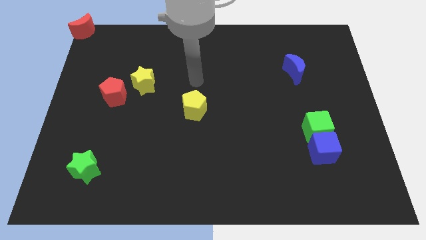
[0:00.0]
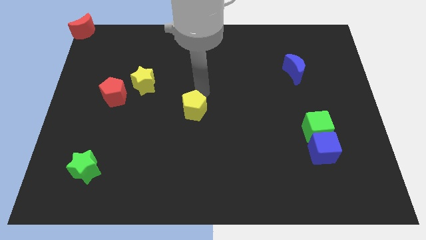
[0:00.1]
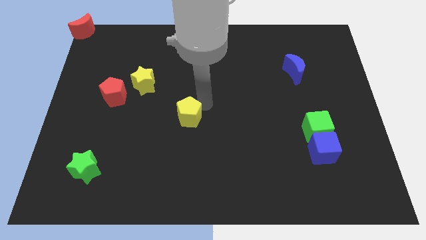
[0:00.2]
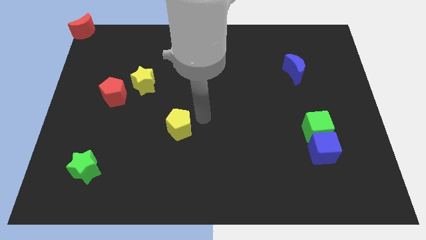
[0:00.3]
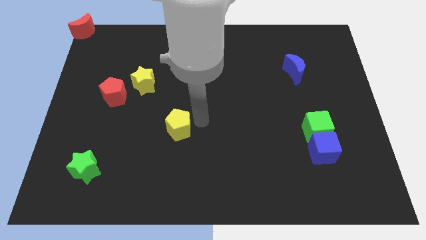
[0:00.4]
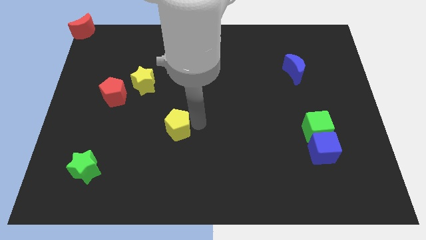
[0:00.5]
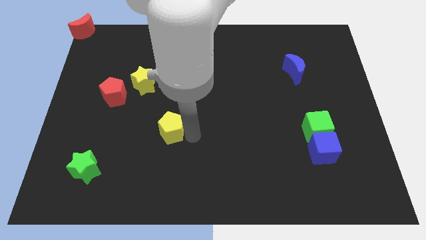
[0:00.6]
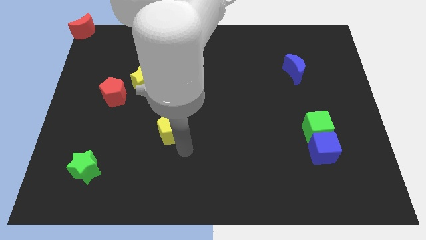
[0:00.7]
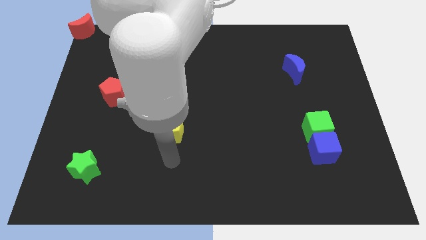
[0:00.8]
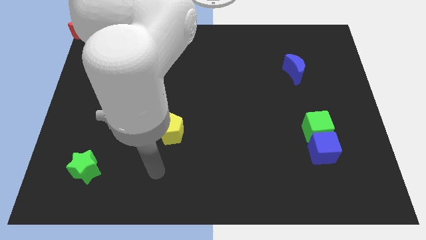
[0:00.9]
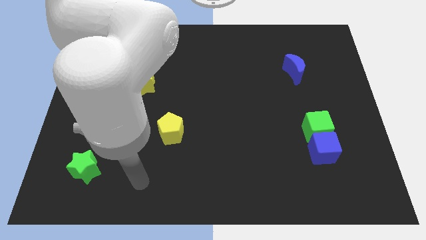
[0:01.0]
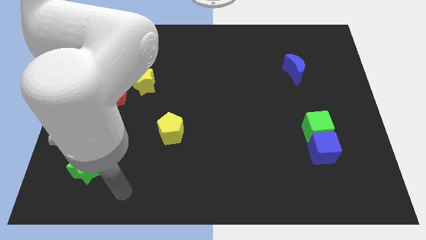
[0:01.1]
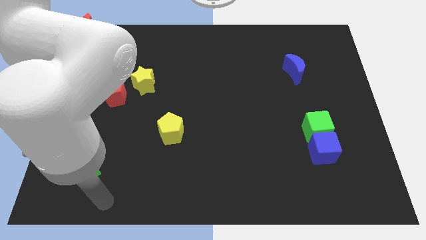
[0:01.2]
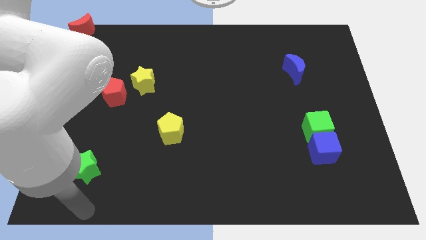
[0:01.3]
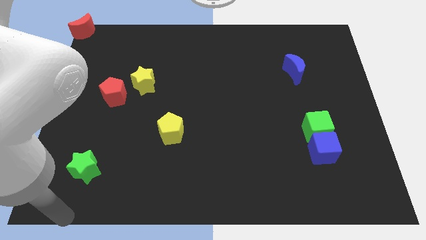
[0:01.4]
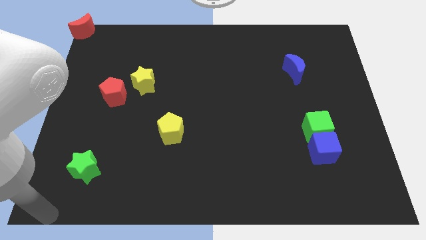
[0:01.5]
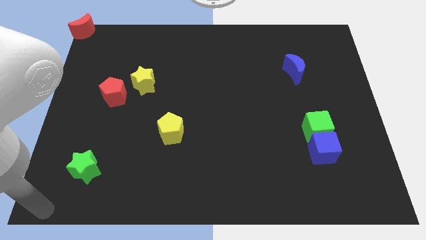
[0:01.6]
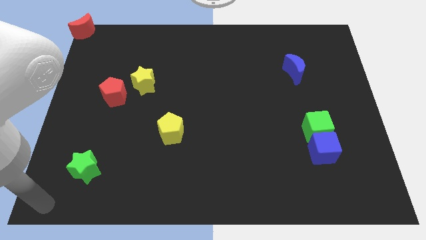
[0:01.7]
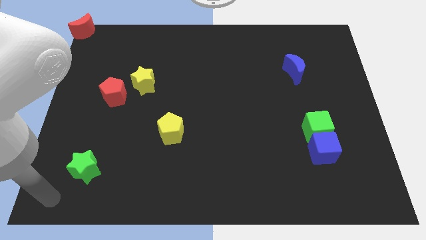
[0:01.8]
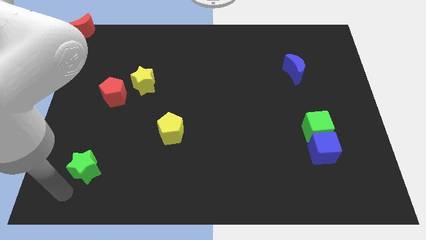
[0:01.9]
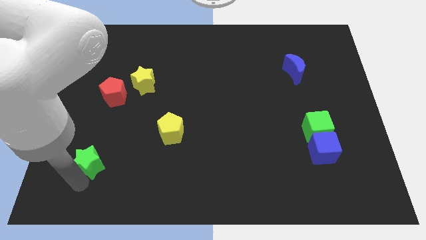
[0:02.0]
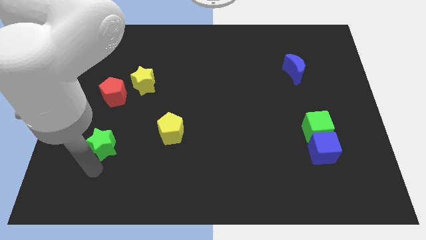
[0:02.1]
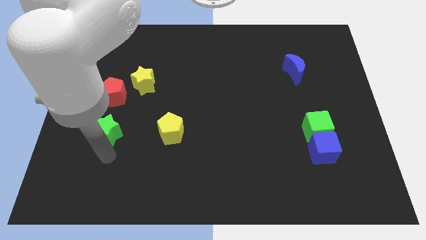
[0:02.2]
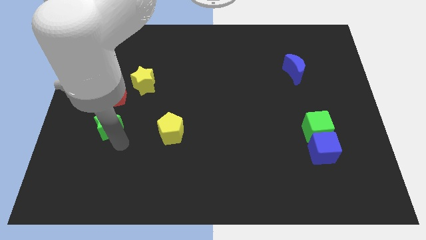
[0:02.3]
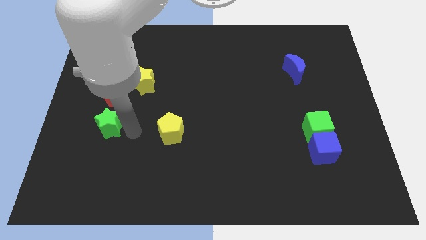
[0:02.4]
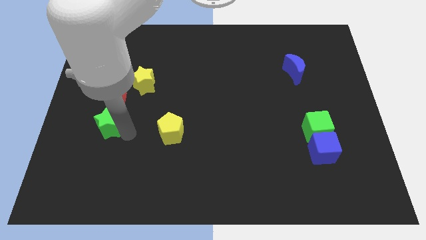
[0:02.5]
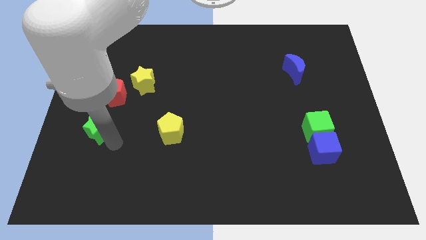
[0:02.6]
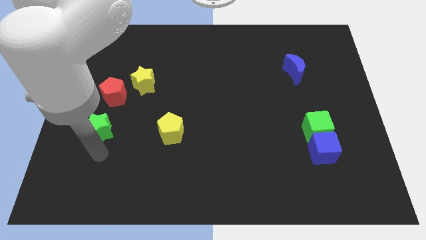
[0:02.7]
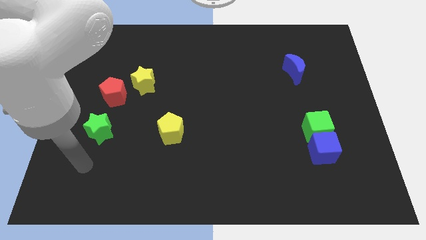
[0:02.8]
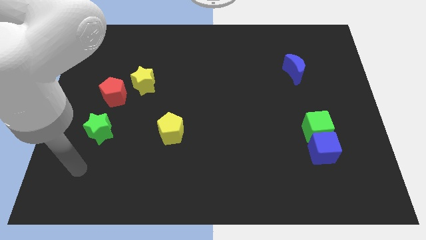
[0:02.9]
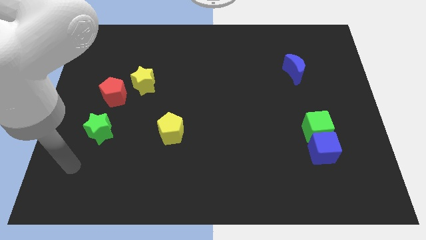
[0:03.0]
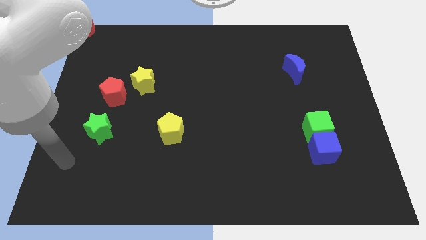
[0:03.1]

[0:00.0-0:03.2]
move the green star towards the bottom of the red pentagon

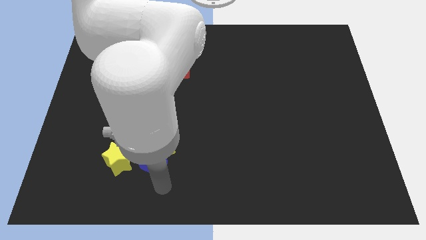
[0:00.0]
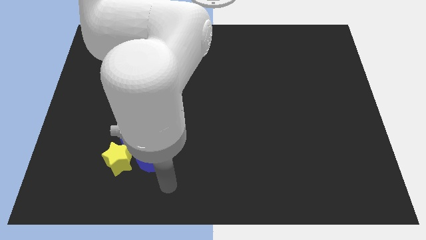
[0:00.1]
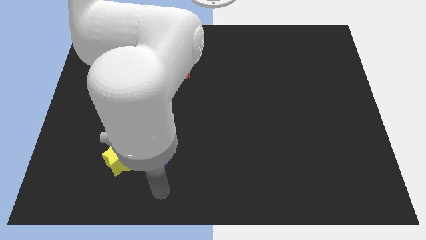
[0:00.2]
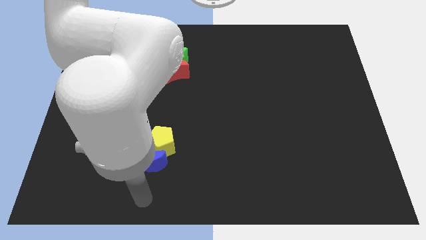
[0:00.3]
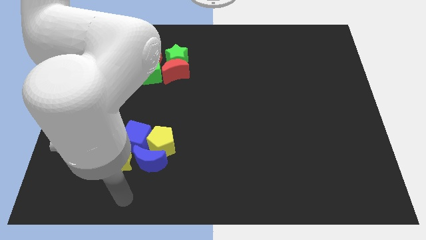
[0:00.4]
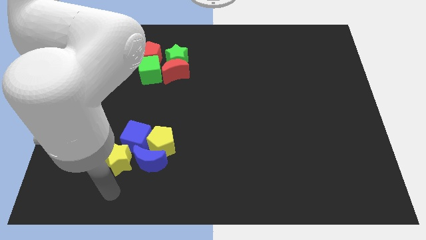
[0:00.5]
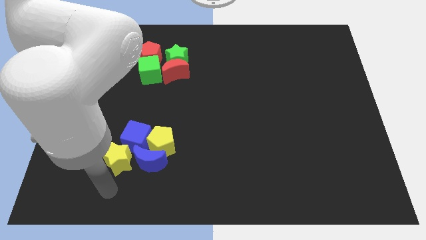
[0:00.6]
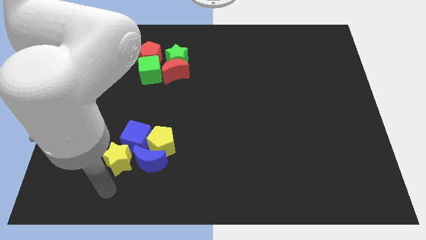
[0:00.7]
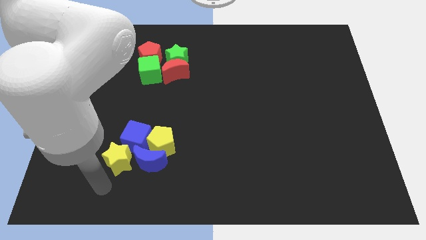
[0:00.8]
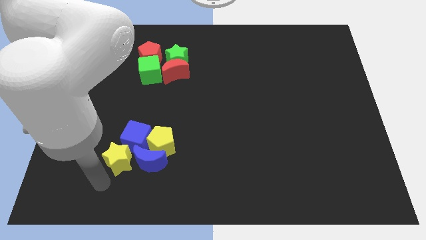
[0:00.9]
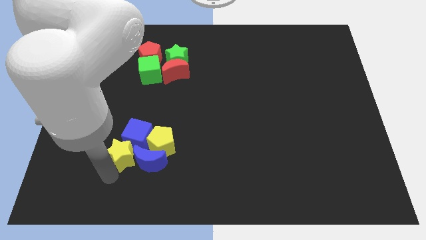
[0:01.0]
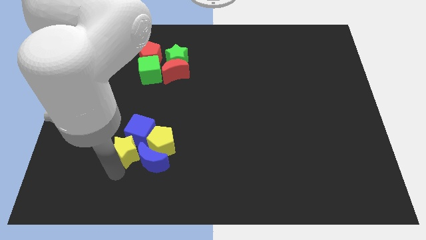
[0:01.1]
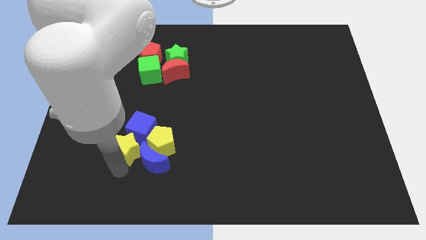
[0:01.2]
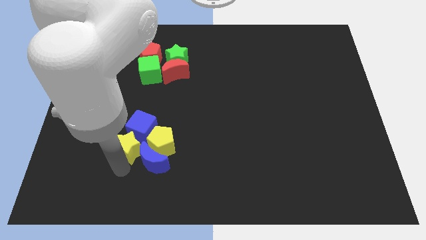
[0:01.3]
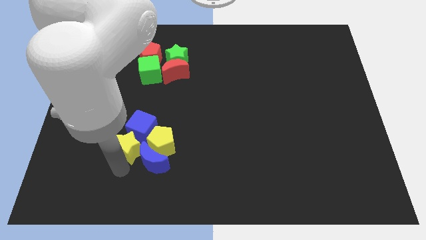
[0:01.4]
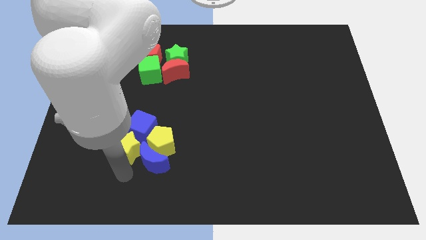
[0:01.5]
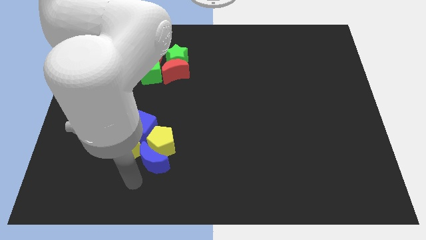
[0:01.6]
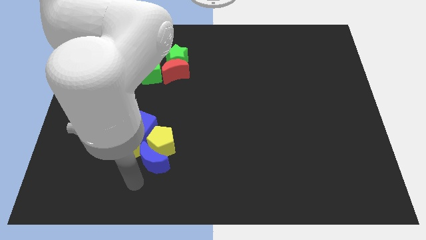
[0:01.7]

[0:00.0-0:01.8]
push the yellow star into the blue cube

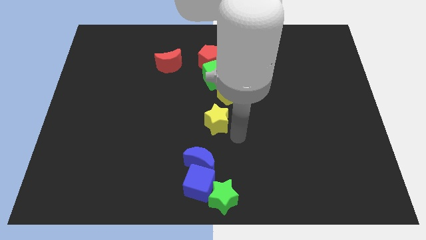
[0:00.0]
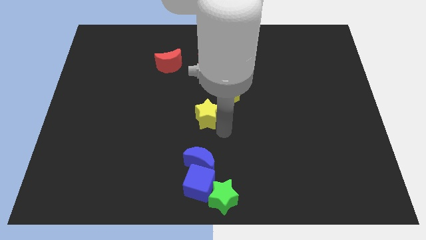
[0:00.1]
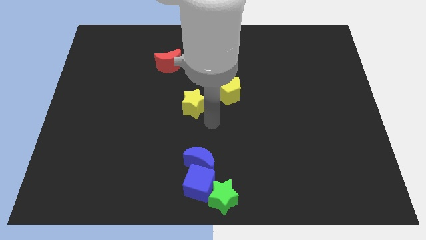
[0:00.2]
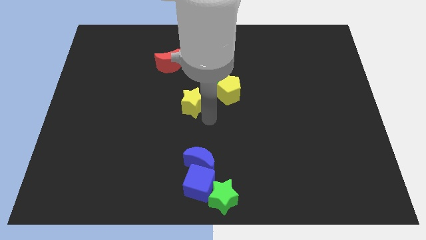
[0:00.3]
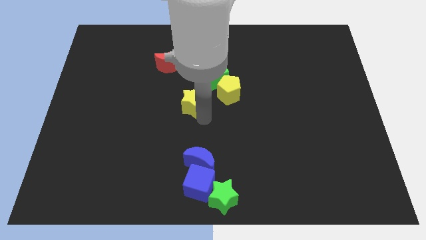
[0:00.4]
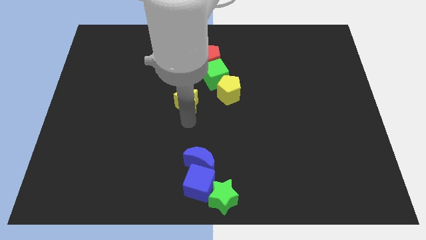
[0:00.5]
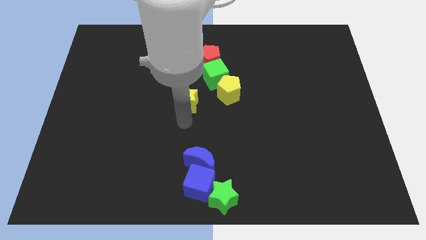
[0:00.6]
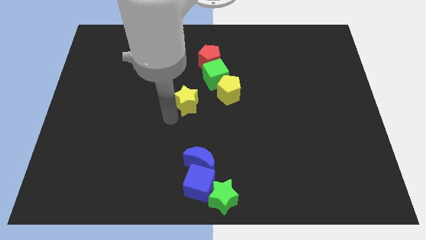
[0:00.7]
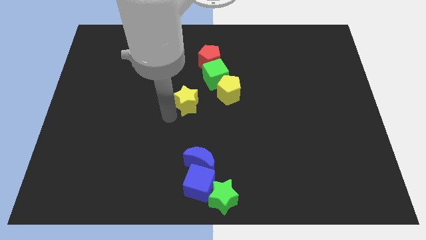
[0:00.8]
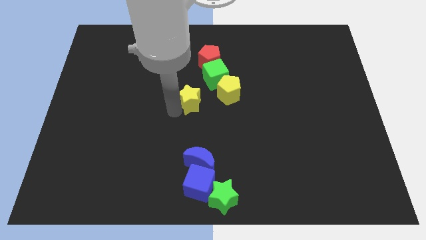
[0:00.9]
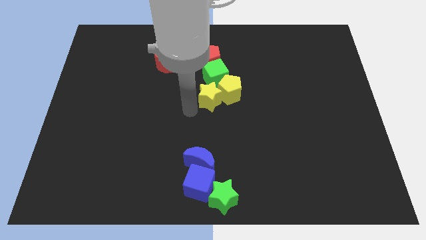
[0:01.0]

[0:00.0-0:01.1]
place the yellow star horizontally to the left side of the yellow pentagon

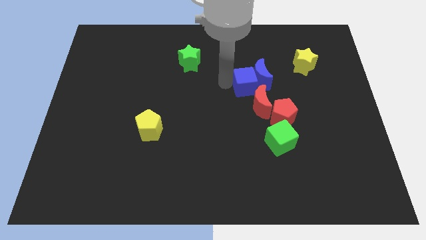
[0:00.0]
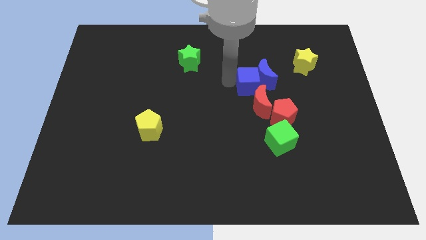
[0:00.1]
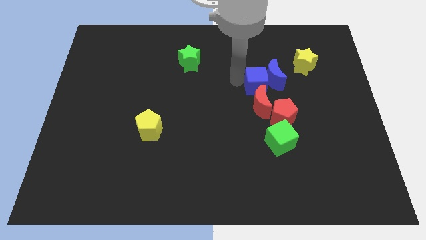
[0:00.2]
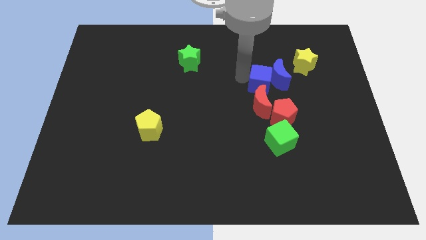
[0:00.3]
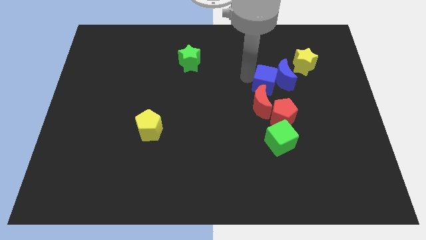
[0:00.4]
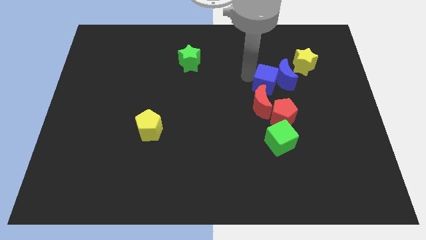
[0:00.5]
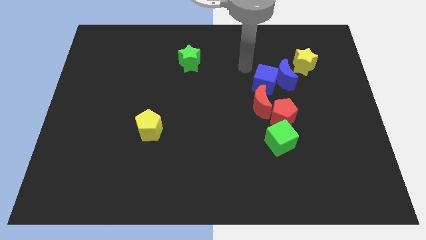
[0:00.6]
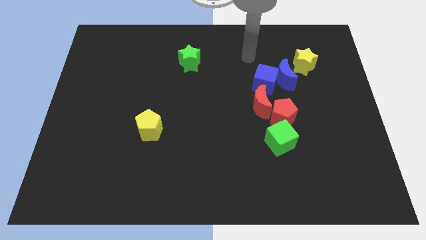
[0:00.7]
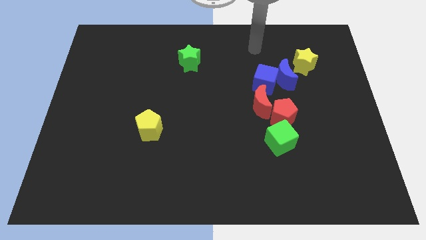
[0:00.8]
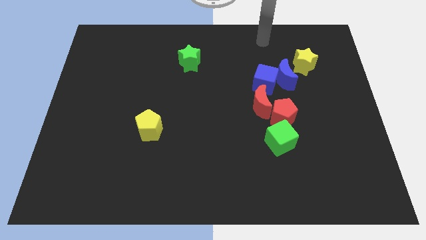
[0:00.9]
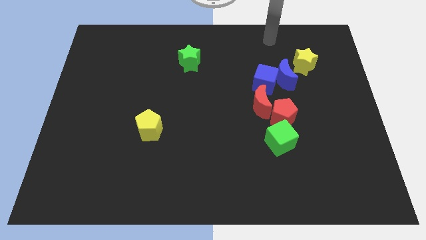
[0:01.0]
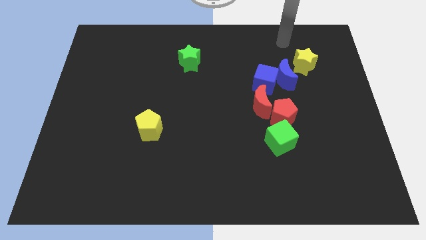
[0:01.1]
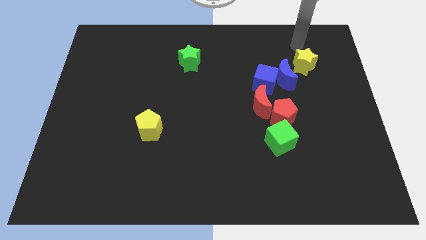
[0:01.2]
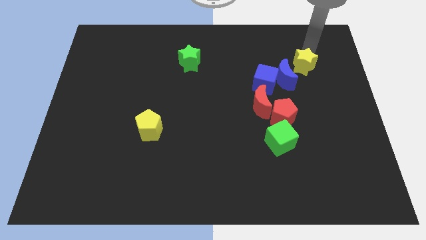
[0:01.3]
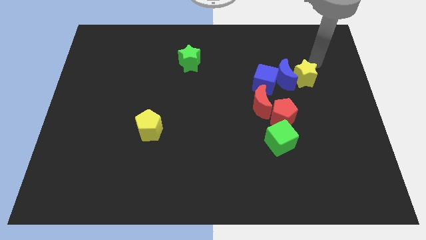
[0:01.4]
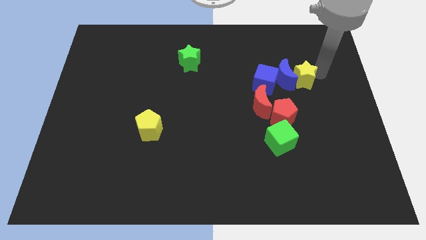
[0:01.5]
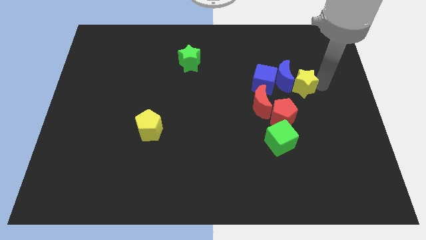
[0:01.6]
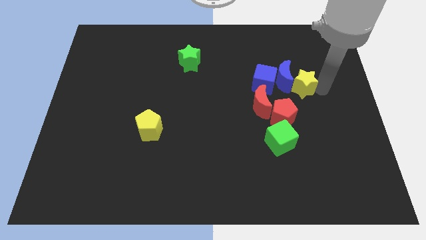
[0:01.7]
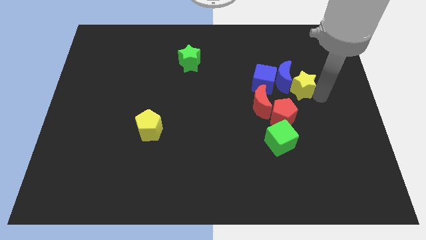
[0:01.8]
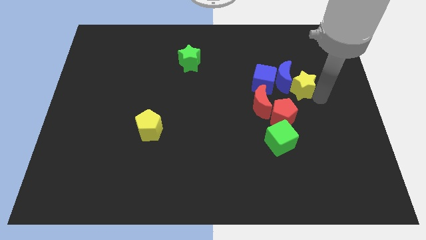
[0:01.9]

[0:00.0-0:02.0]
move yellow star close to the blue moon

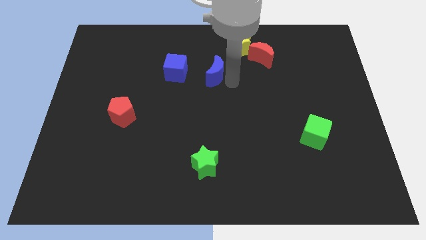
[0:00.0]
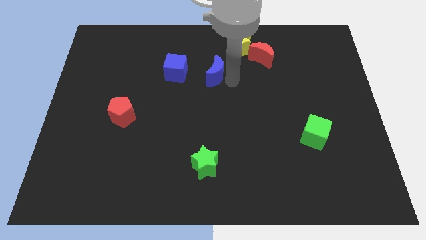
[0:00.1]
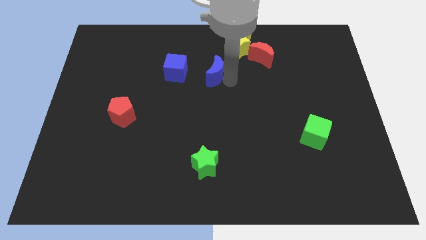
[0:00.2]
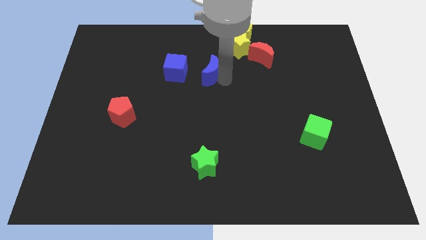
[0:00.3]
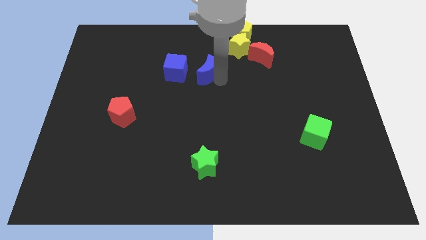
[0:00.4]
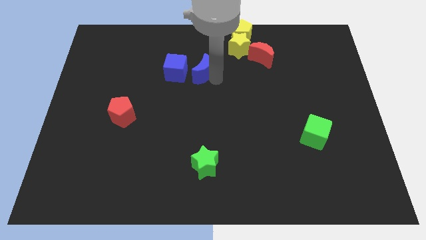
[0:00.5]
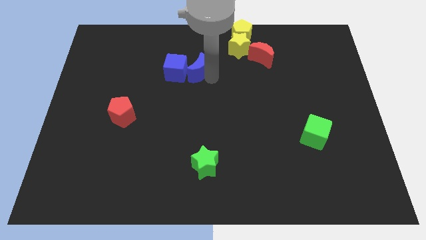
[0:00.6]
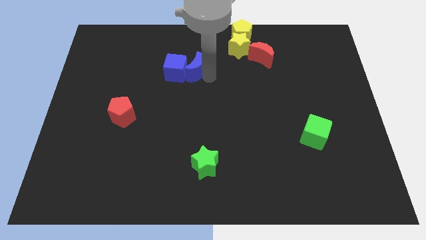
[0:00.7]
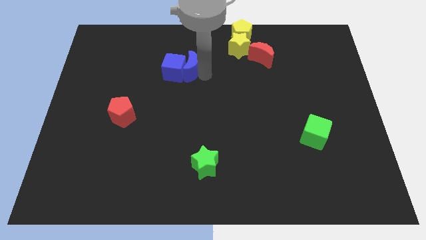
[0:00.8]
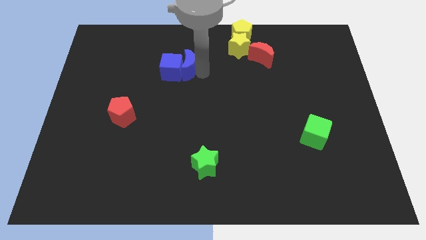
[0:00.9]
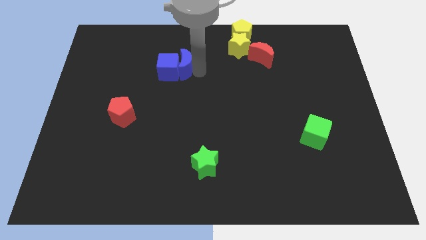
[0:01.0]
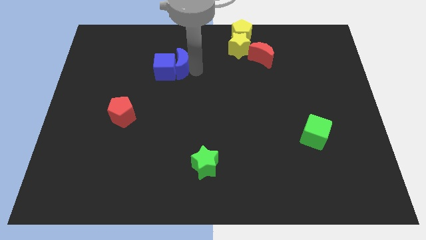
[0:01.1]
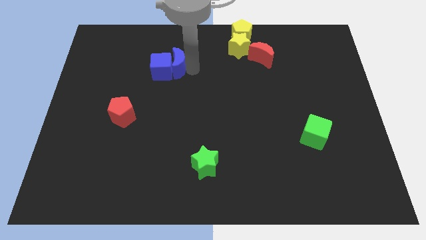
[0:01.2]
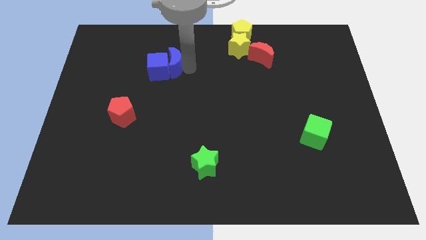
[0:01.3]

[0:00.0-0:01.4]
put the blue semi circle into the blue cube
